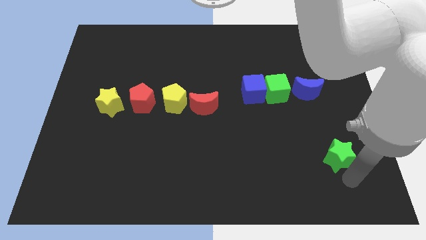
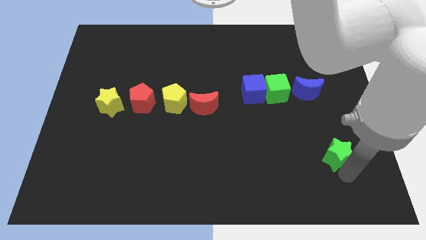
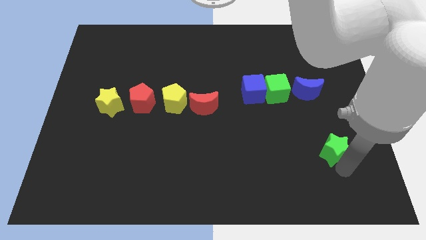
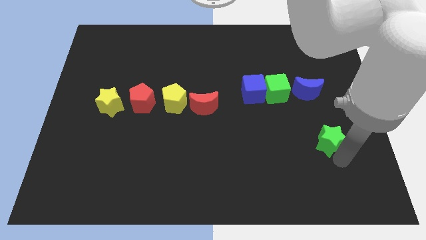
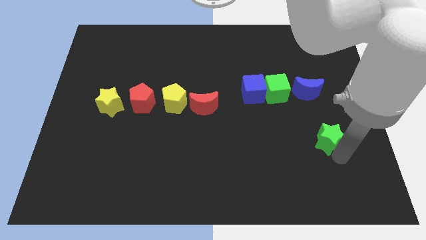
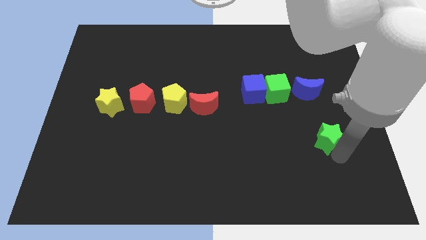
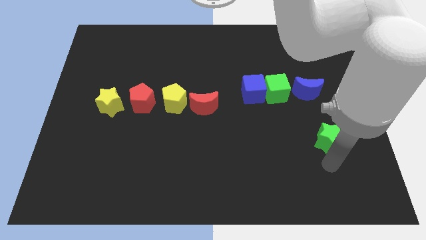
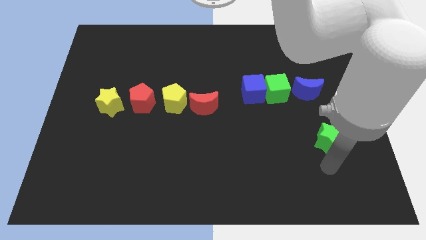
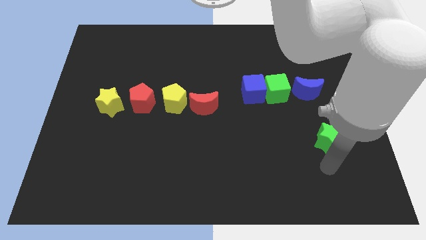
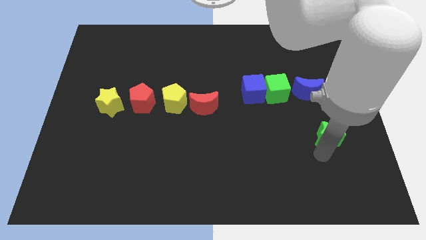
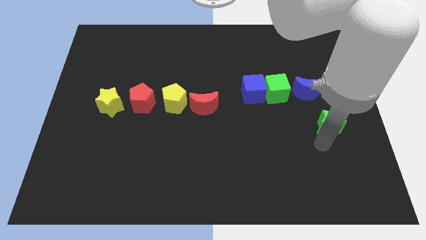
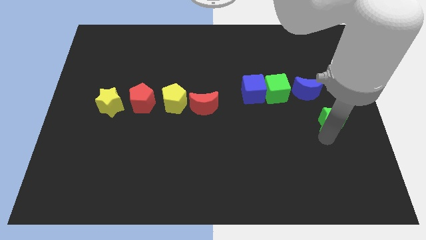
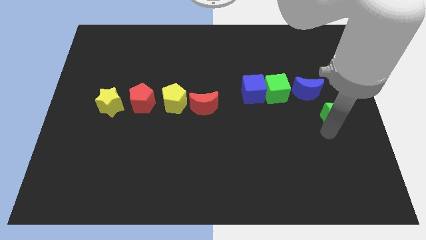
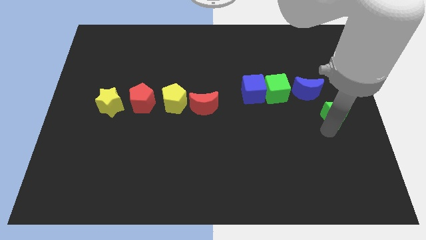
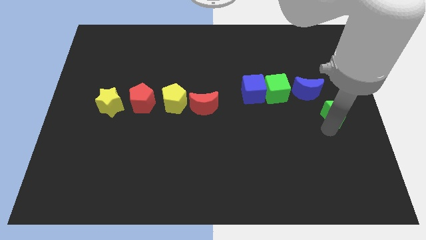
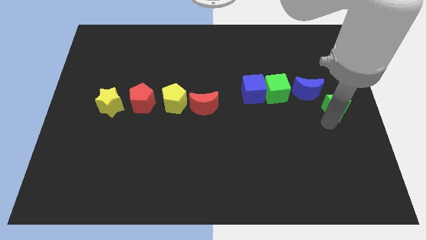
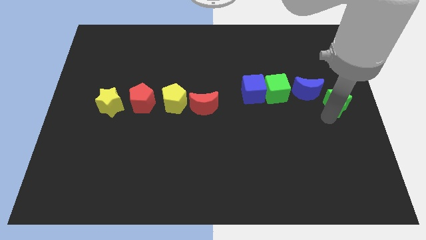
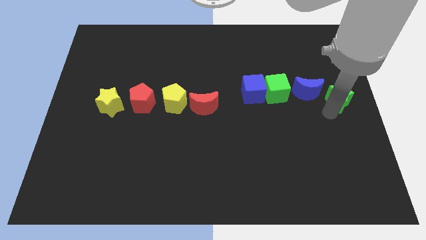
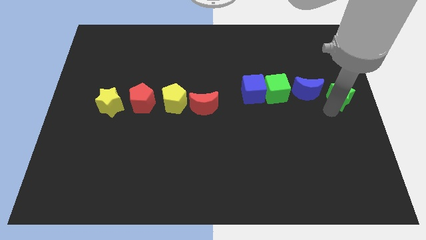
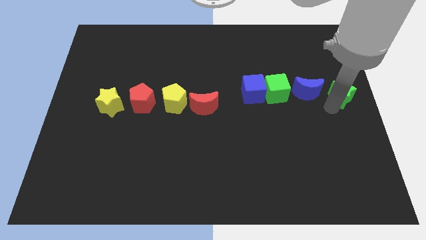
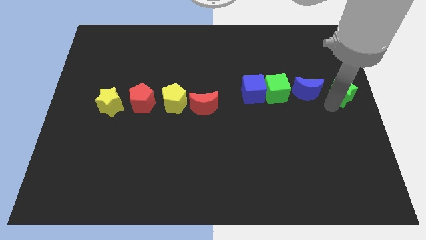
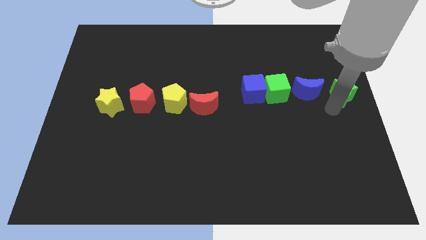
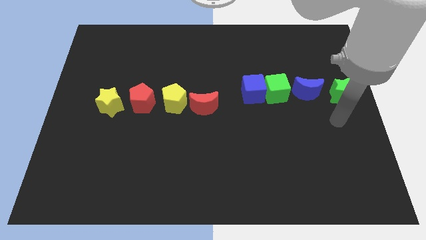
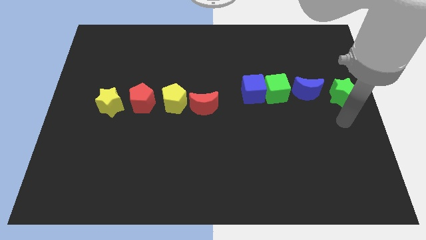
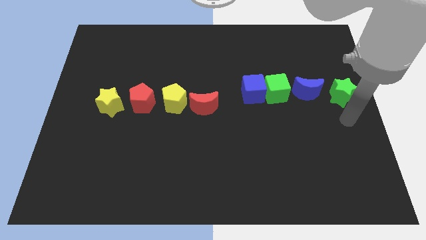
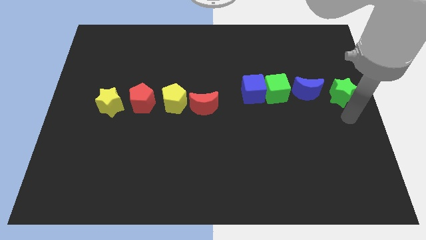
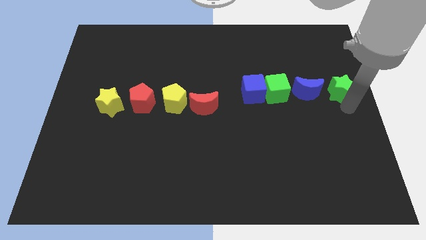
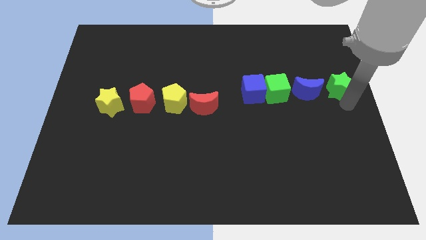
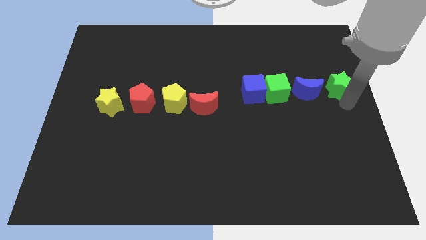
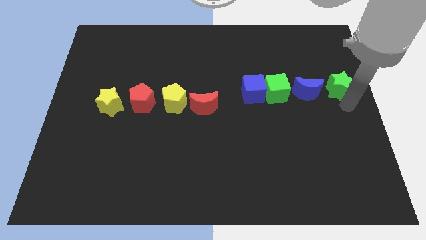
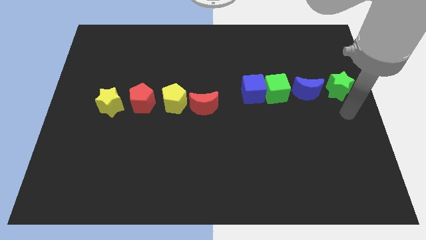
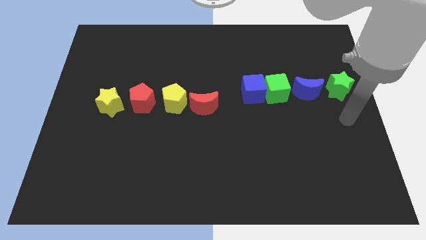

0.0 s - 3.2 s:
place the green star beside the blue crescent

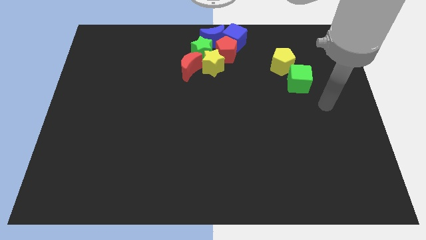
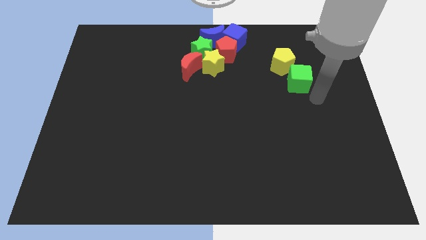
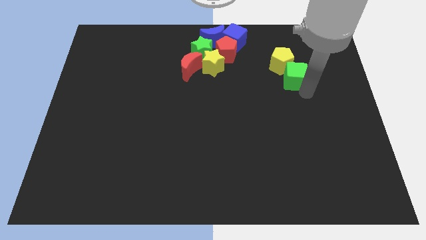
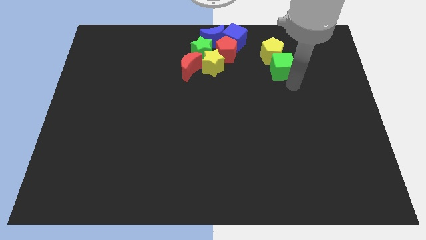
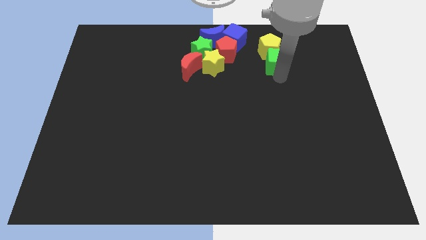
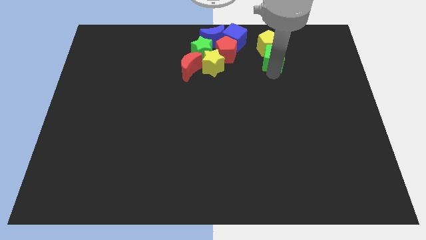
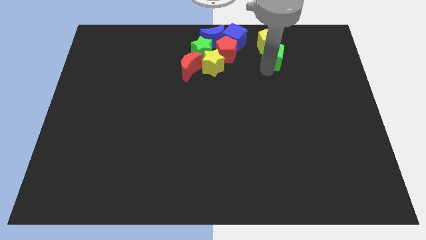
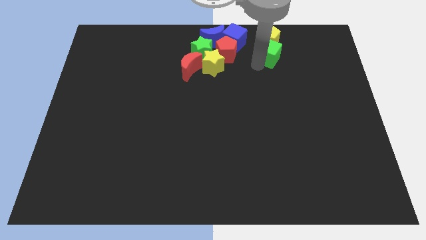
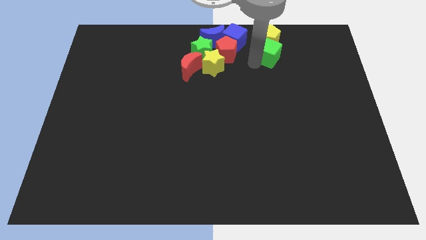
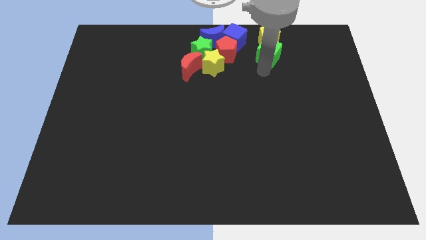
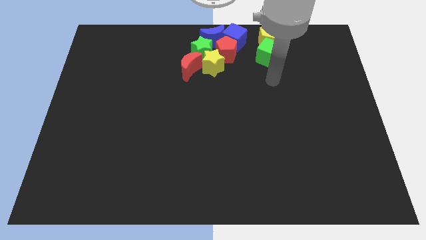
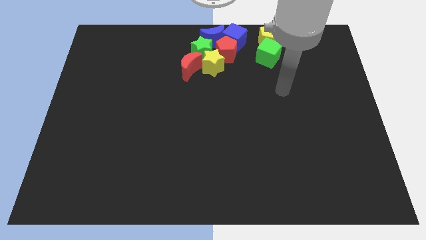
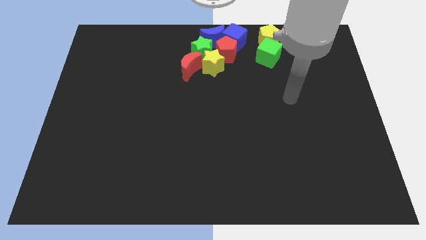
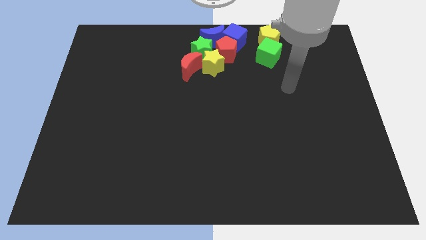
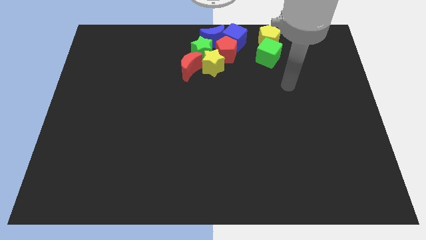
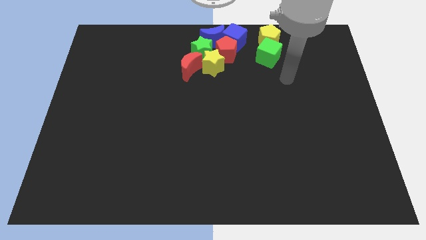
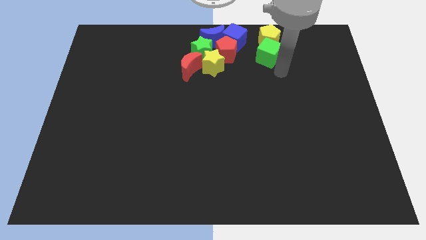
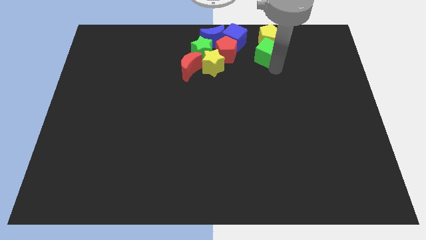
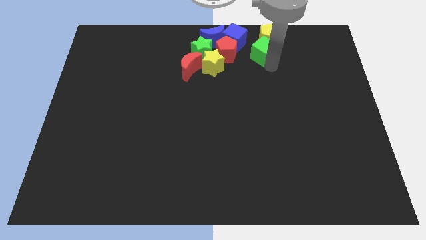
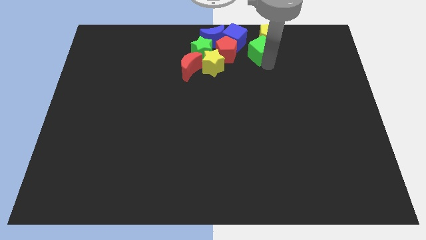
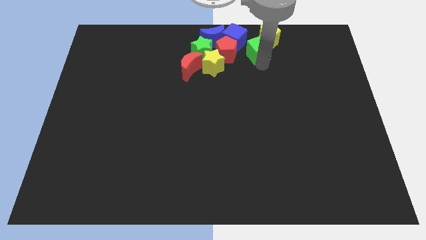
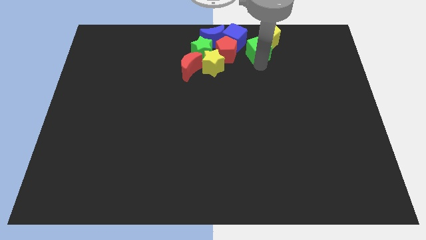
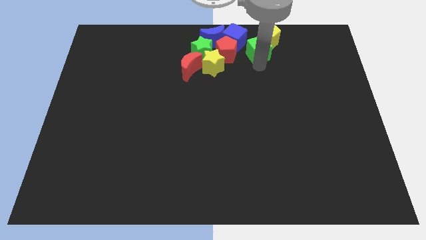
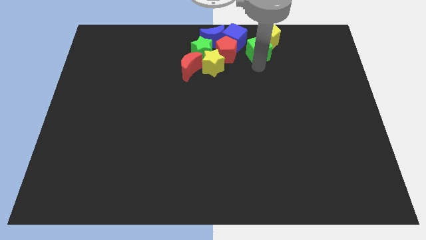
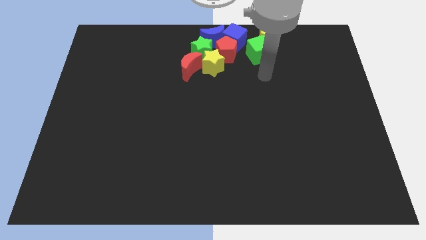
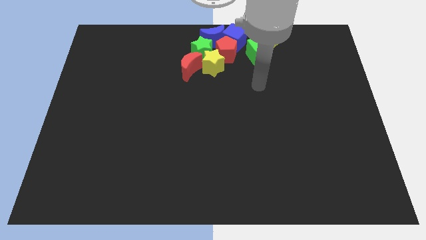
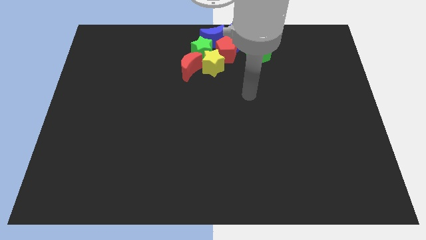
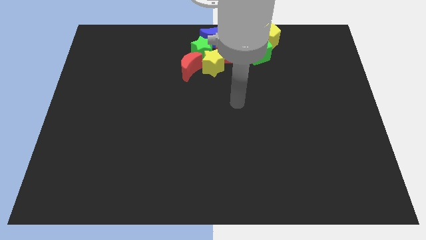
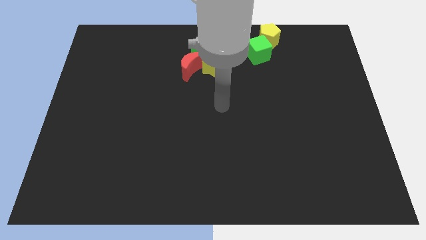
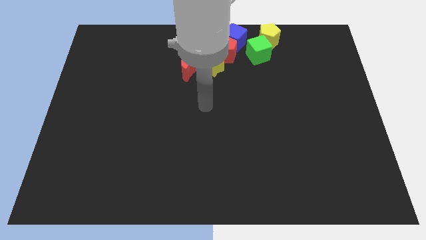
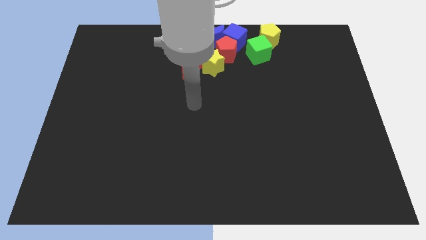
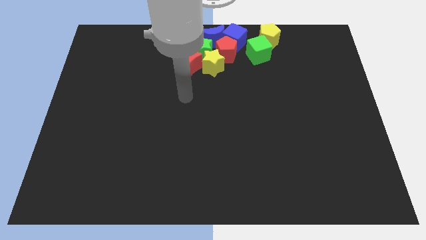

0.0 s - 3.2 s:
push the green cube along with the yellow pentagon to the top

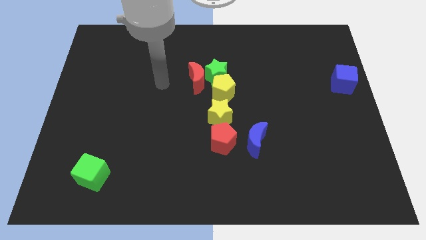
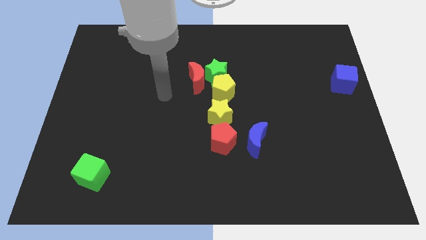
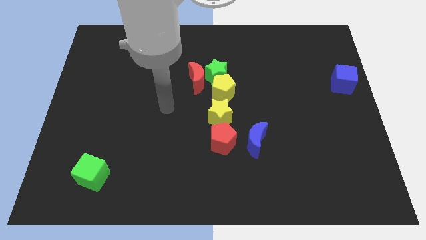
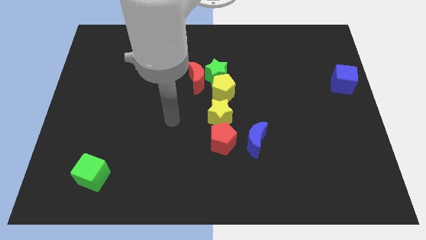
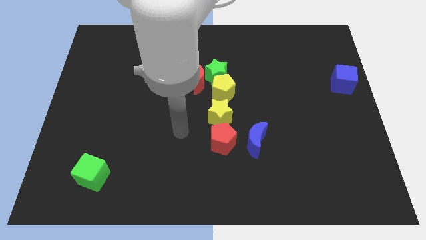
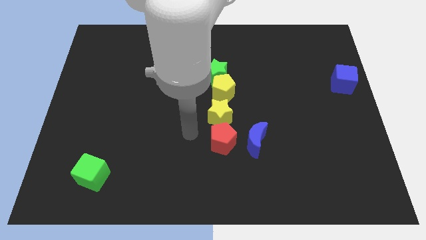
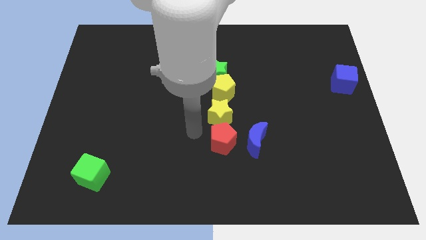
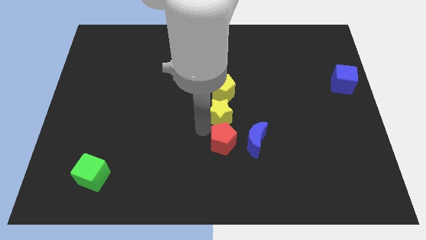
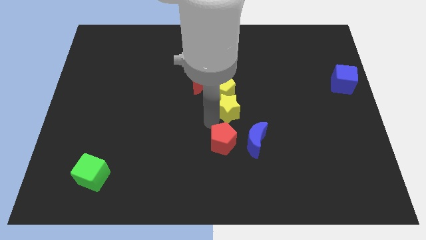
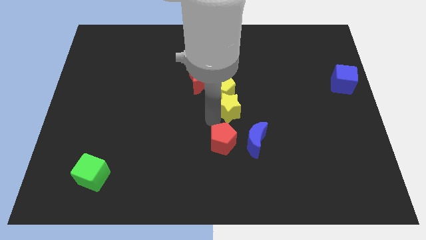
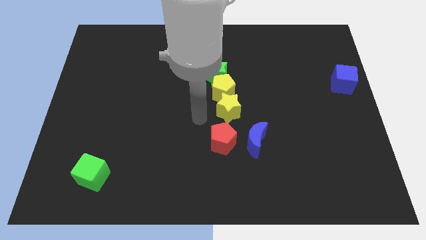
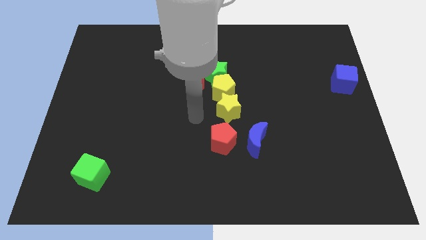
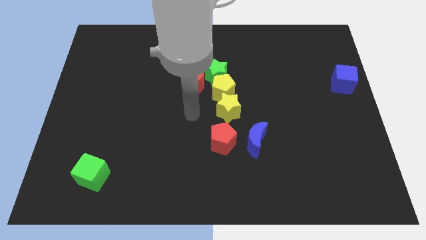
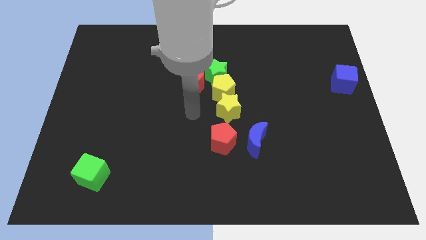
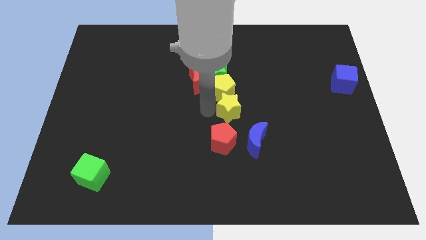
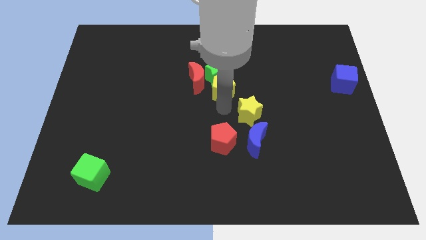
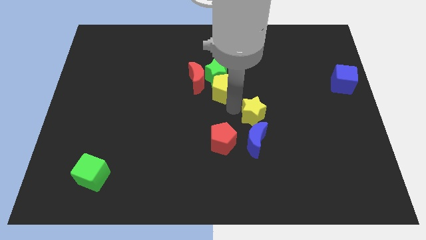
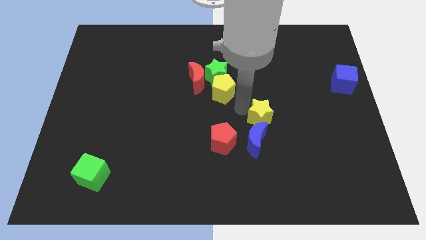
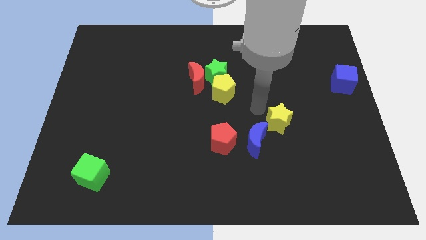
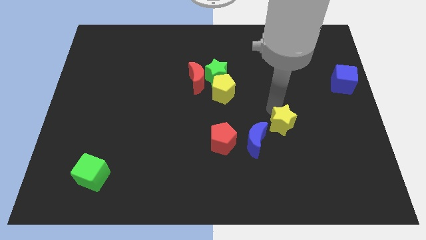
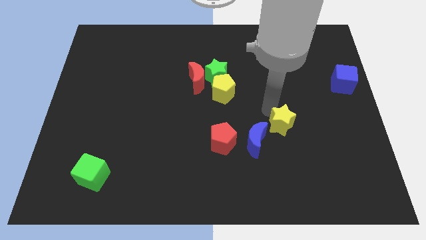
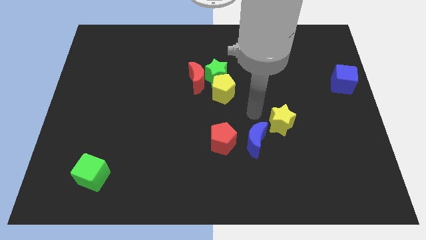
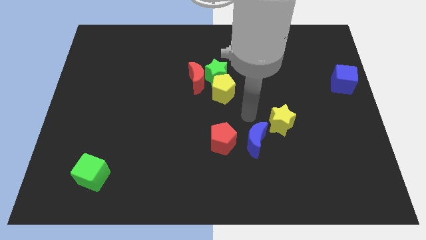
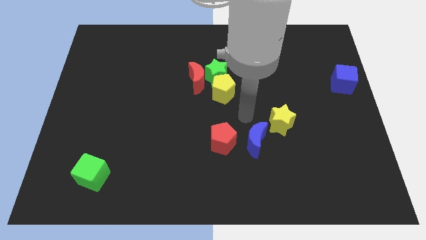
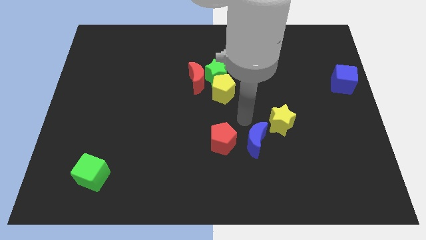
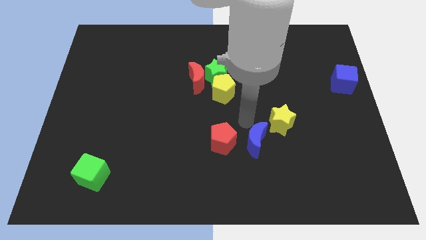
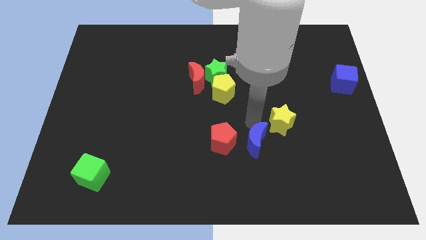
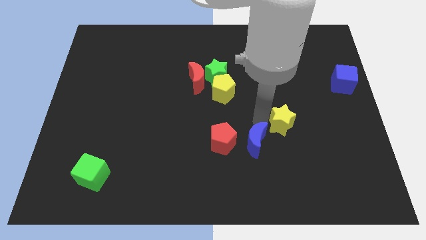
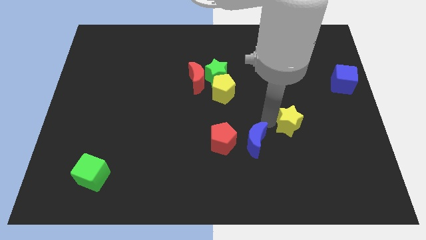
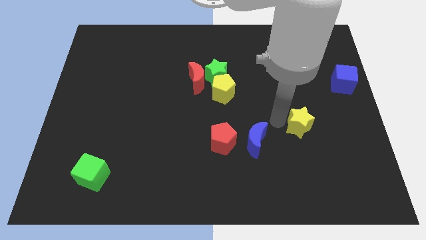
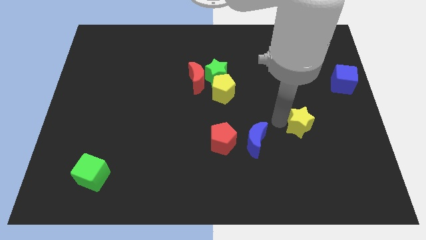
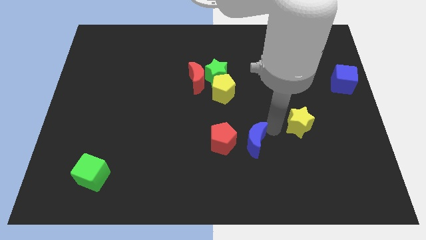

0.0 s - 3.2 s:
push the yellow star to the top right of the blue crescent
